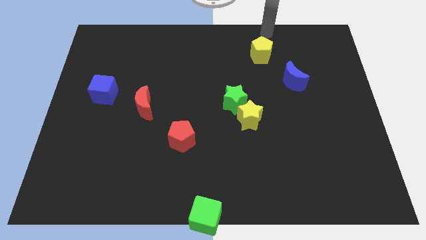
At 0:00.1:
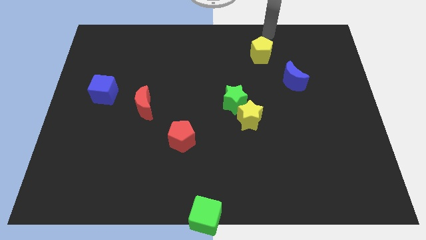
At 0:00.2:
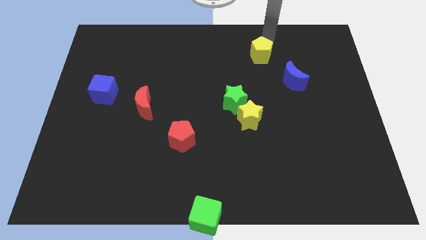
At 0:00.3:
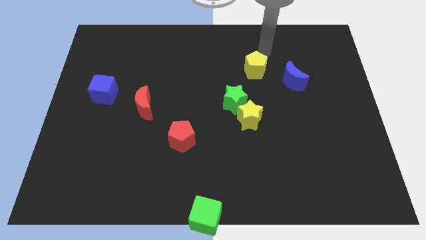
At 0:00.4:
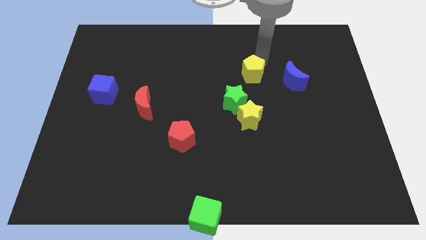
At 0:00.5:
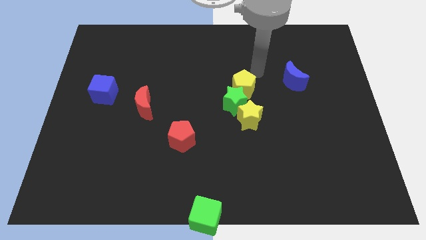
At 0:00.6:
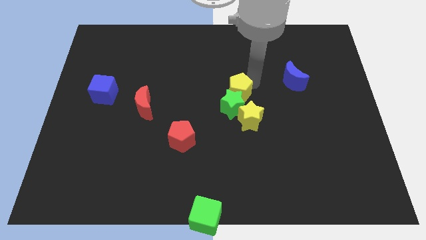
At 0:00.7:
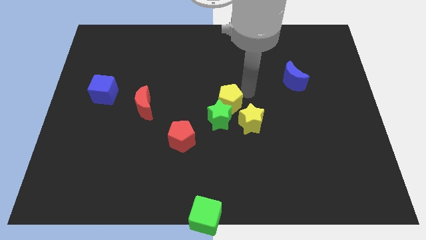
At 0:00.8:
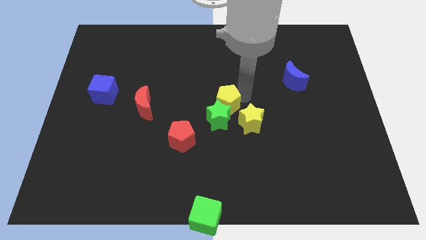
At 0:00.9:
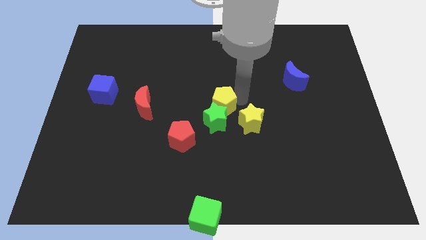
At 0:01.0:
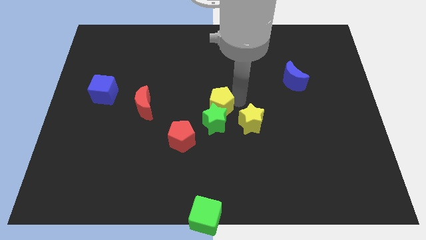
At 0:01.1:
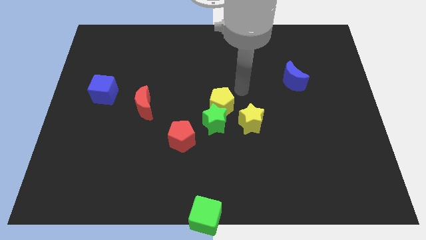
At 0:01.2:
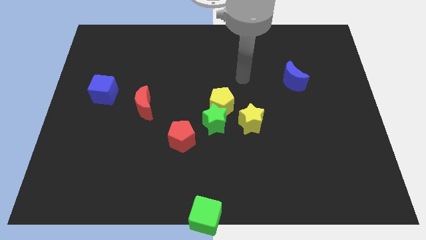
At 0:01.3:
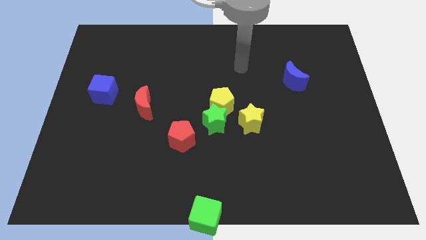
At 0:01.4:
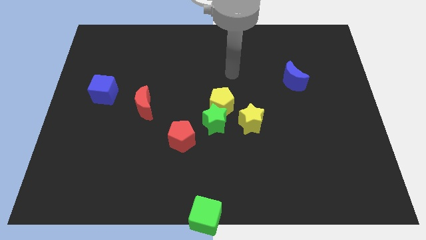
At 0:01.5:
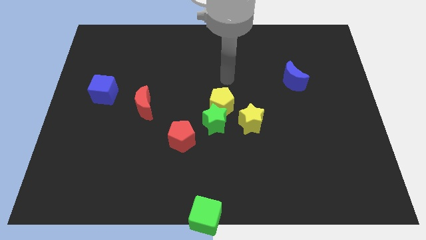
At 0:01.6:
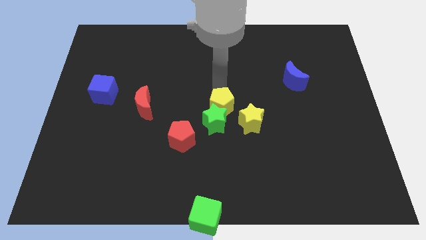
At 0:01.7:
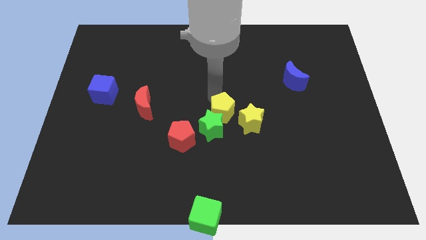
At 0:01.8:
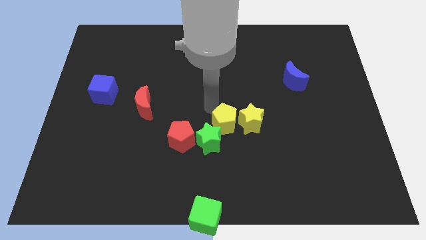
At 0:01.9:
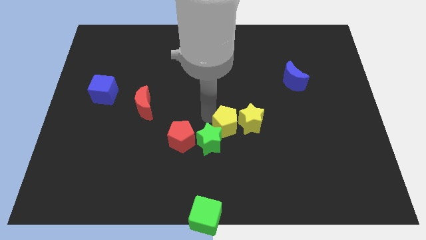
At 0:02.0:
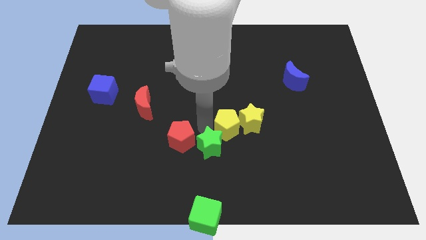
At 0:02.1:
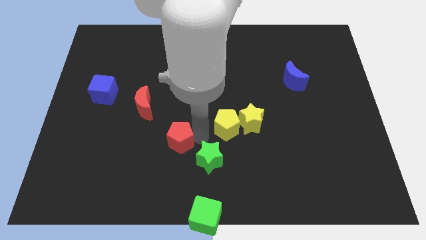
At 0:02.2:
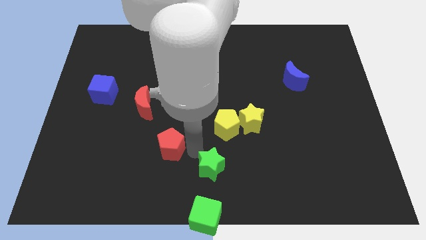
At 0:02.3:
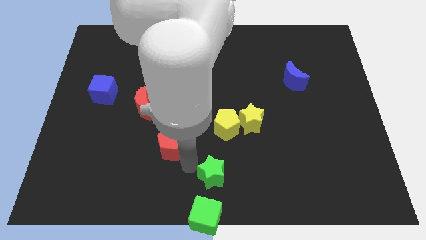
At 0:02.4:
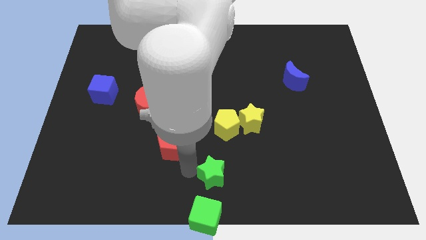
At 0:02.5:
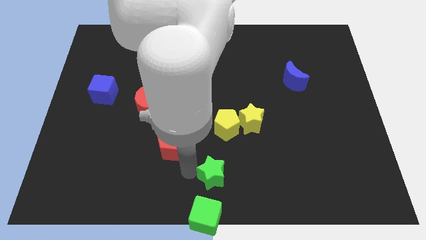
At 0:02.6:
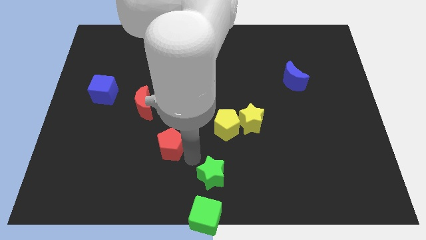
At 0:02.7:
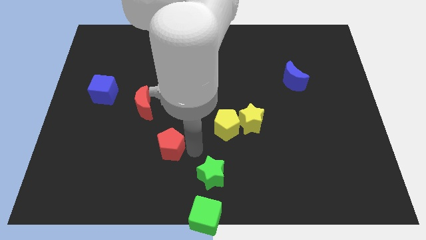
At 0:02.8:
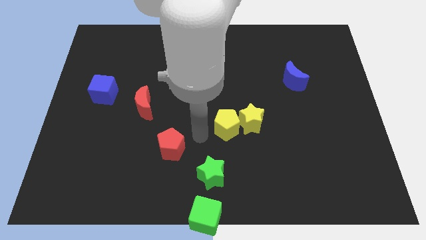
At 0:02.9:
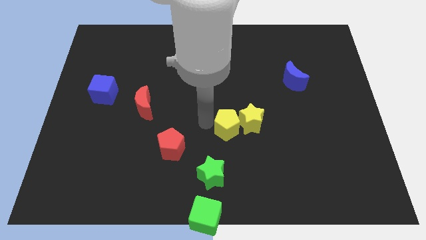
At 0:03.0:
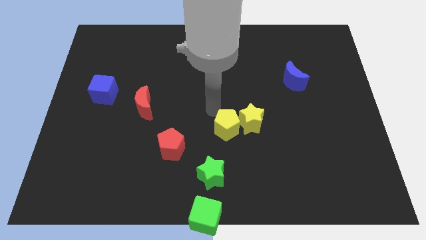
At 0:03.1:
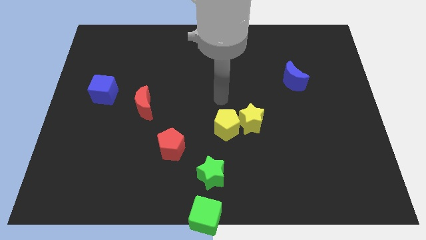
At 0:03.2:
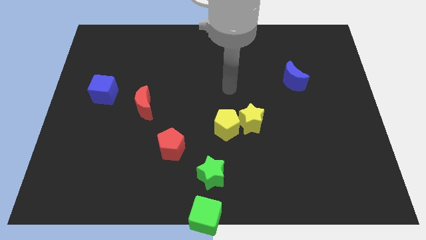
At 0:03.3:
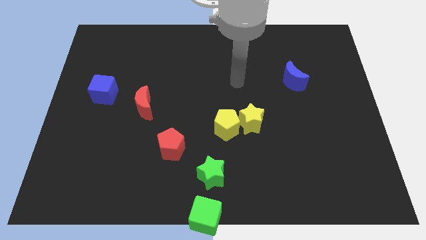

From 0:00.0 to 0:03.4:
move the yellow pentagon along with green star toward the bottom center

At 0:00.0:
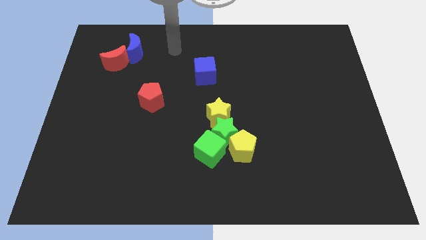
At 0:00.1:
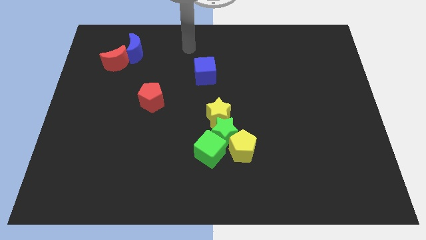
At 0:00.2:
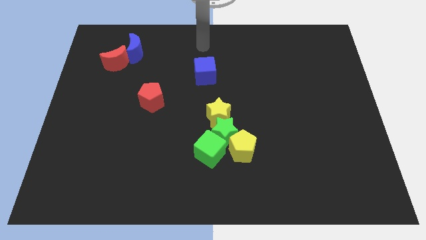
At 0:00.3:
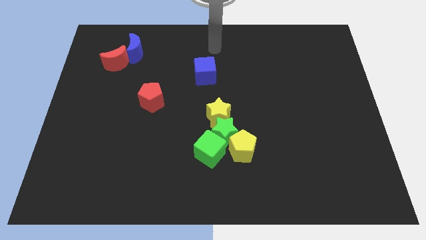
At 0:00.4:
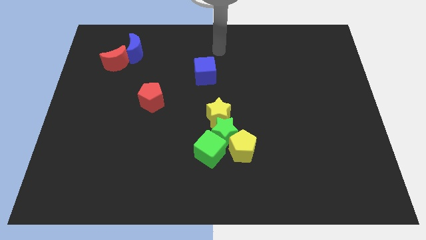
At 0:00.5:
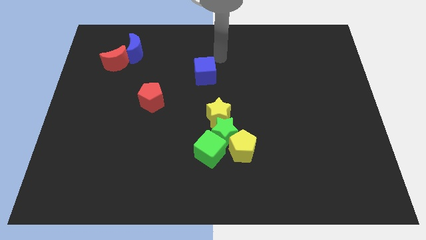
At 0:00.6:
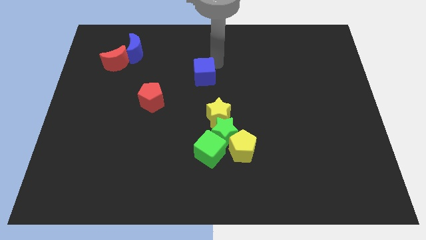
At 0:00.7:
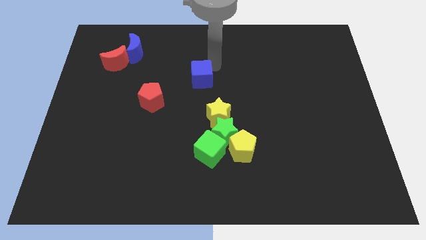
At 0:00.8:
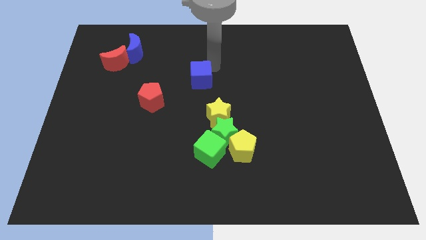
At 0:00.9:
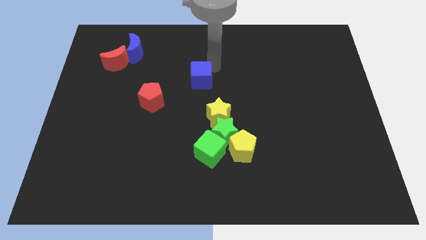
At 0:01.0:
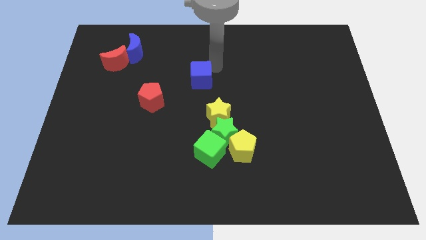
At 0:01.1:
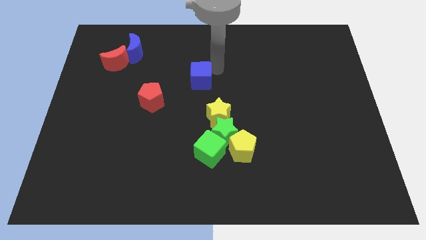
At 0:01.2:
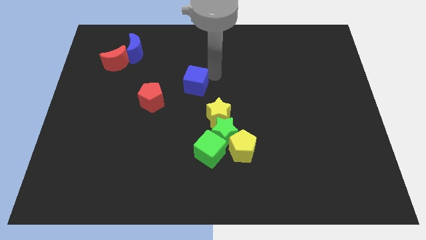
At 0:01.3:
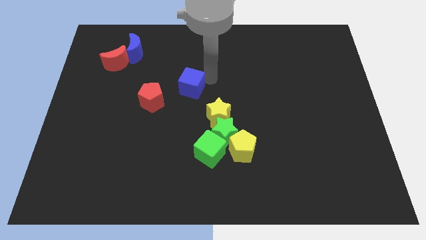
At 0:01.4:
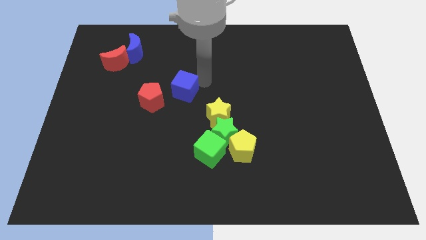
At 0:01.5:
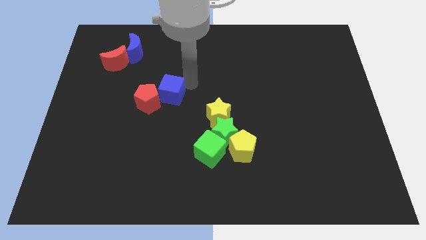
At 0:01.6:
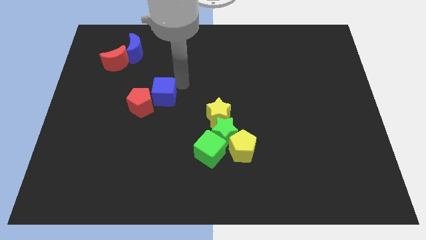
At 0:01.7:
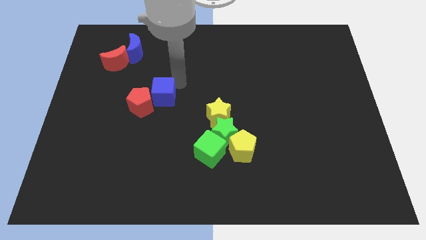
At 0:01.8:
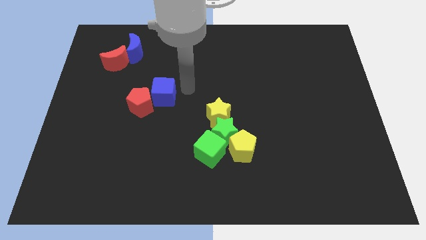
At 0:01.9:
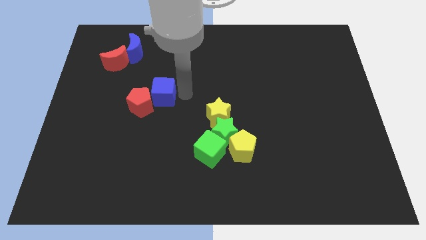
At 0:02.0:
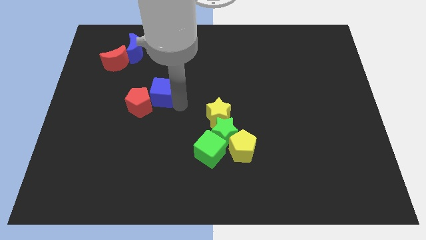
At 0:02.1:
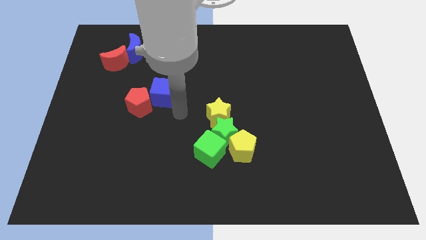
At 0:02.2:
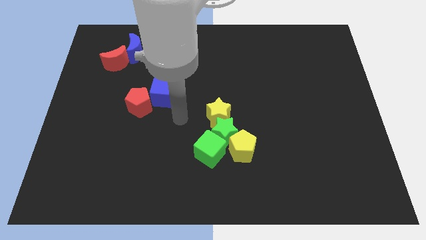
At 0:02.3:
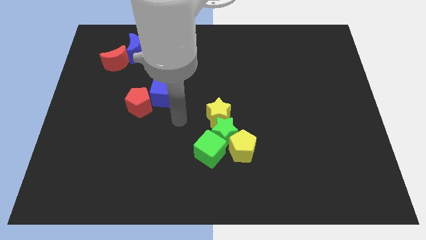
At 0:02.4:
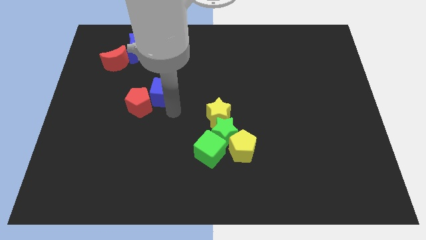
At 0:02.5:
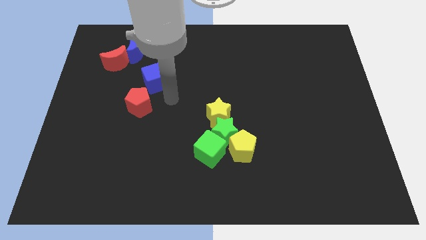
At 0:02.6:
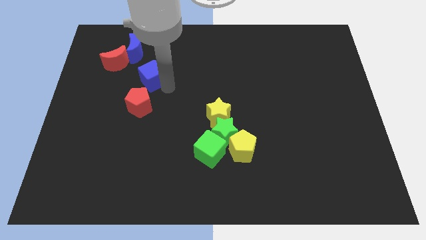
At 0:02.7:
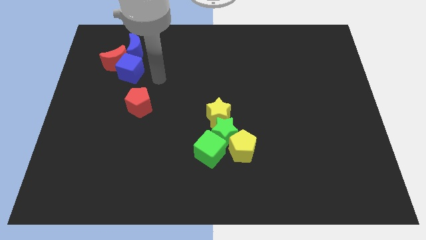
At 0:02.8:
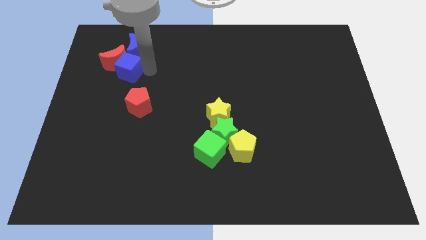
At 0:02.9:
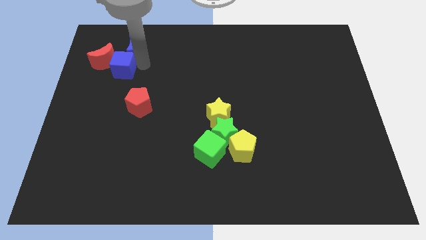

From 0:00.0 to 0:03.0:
push the blue cube in to the red moon

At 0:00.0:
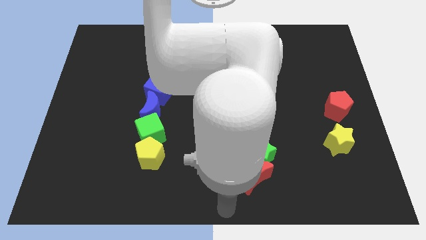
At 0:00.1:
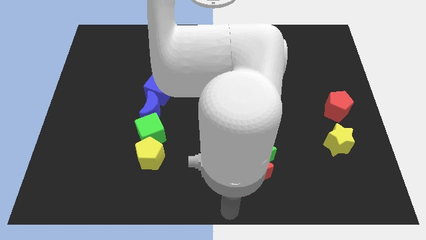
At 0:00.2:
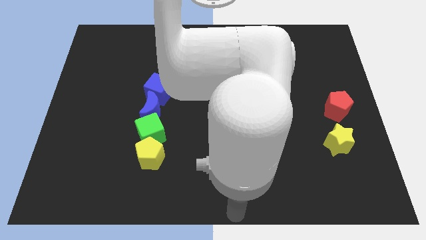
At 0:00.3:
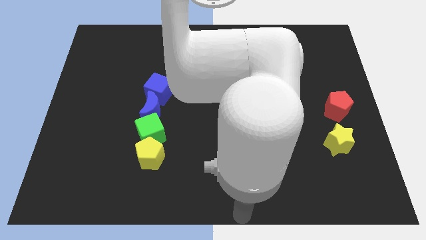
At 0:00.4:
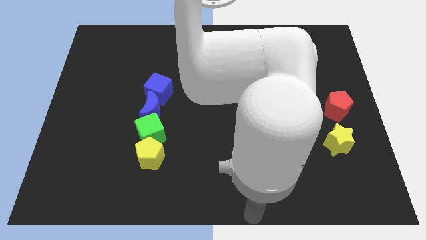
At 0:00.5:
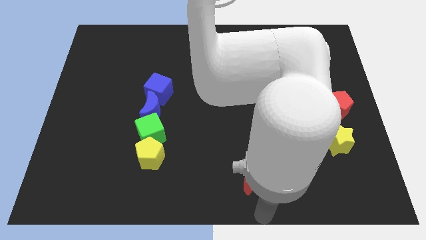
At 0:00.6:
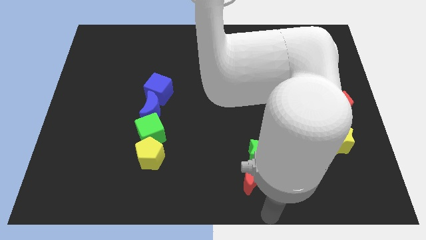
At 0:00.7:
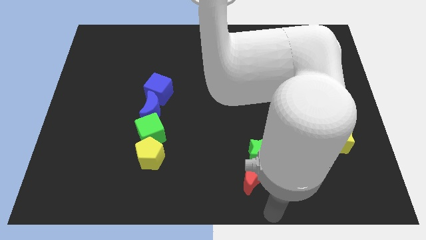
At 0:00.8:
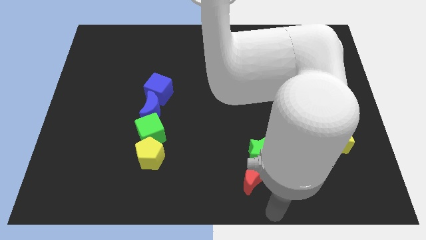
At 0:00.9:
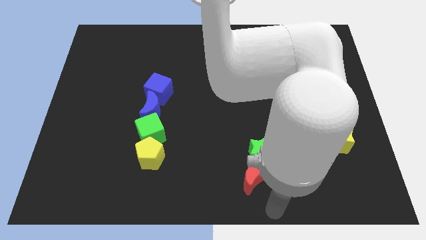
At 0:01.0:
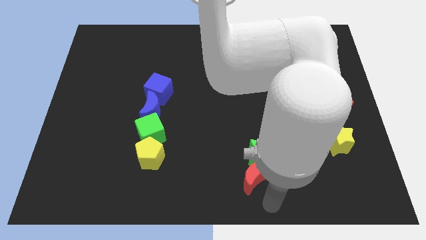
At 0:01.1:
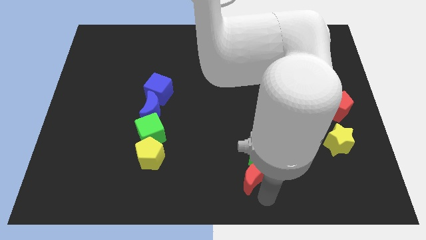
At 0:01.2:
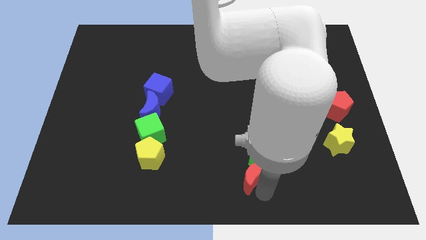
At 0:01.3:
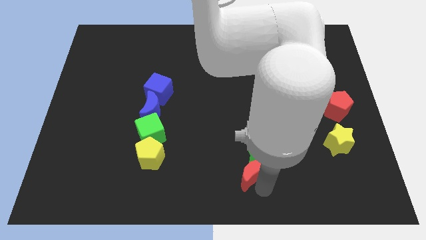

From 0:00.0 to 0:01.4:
move your arm towards the red moon

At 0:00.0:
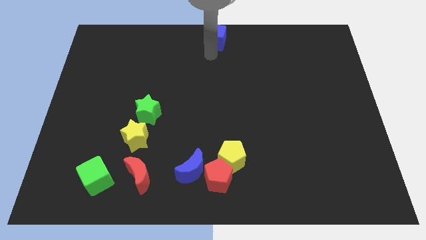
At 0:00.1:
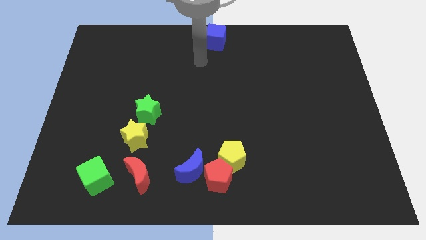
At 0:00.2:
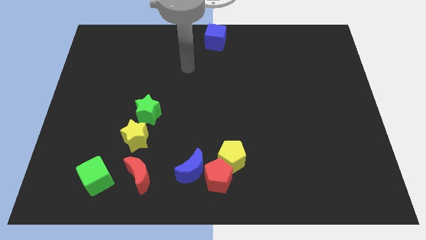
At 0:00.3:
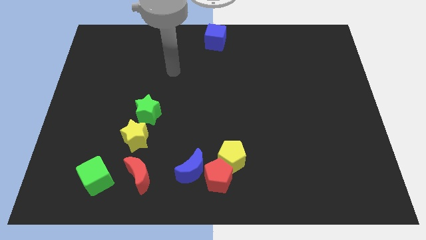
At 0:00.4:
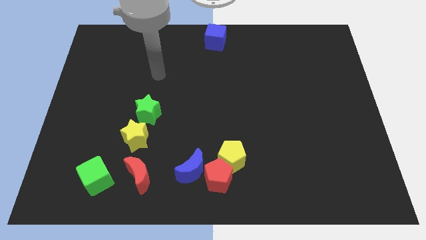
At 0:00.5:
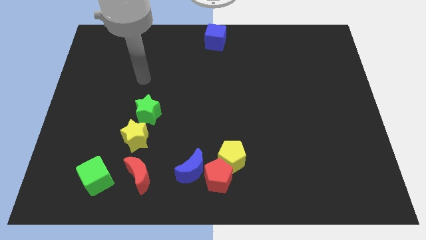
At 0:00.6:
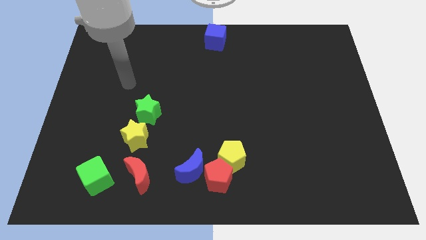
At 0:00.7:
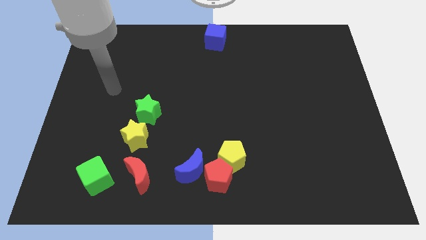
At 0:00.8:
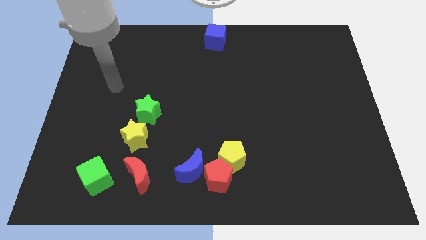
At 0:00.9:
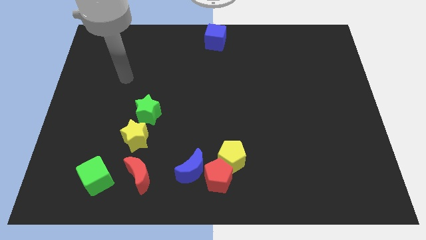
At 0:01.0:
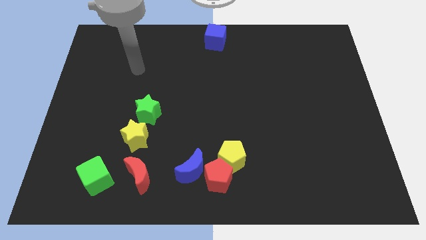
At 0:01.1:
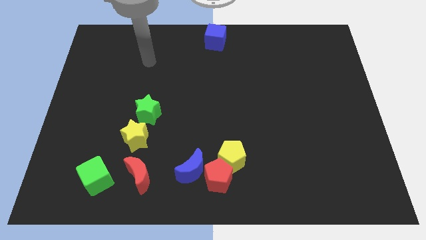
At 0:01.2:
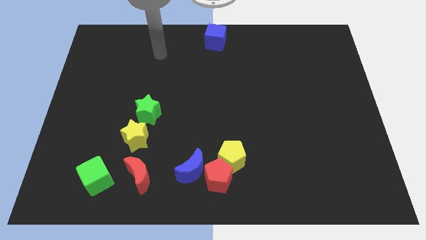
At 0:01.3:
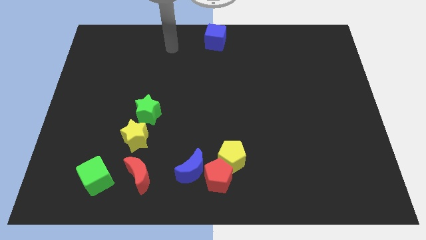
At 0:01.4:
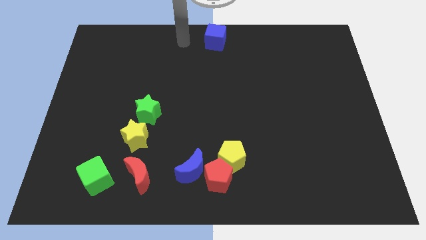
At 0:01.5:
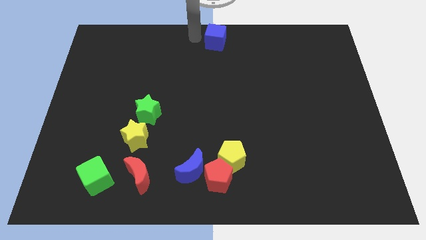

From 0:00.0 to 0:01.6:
point the arm to the left of the blue cube
